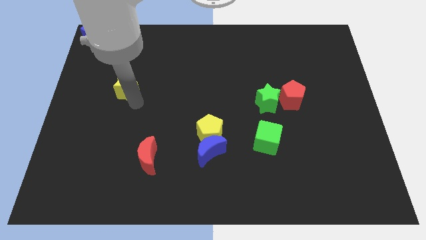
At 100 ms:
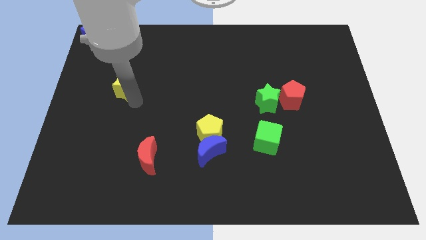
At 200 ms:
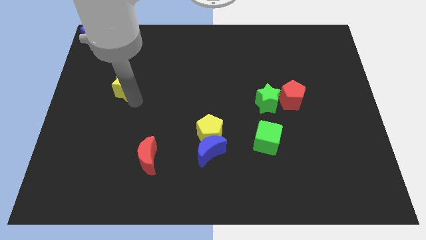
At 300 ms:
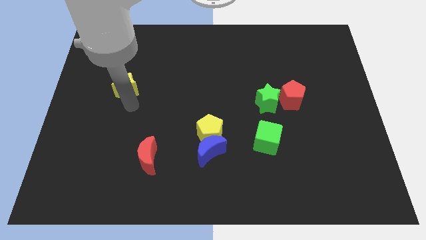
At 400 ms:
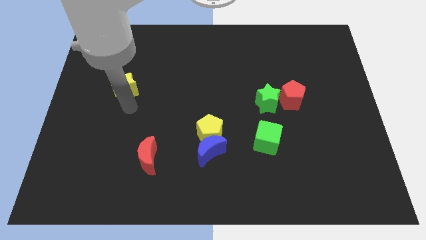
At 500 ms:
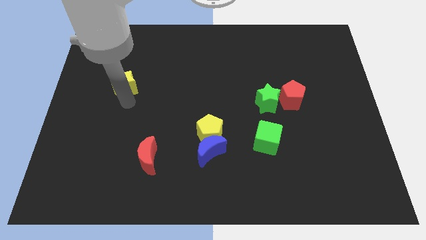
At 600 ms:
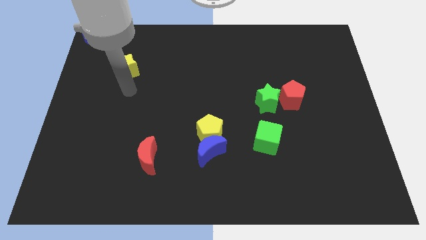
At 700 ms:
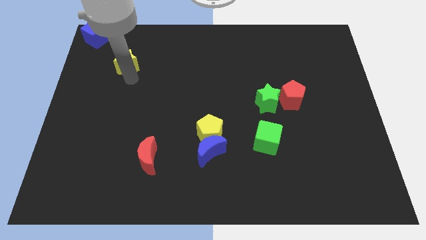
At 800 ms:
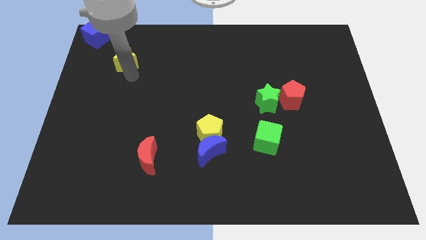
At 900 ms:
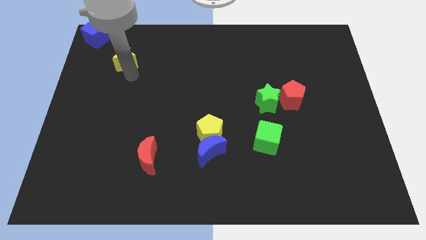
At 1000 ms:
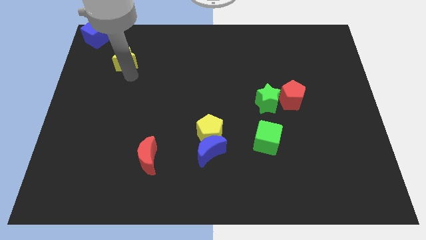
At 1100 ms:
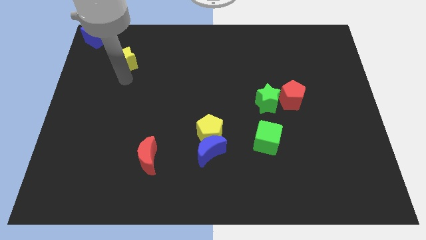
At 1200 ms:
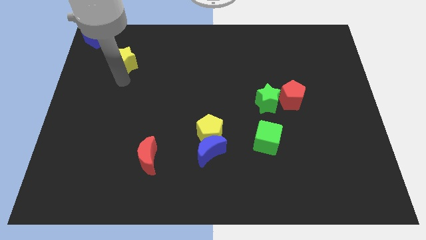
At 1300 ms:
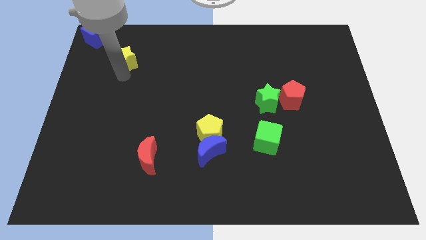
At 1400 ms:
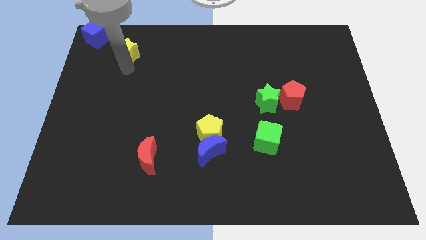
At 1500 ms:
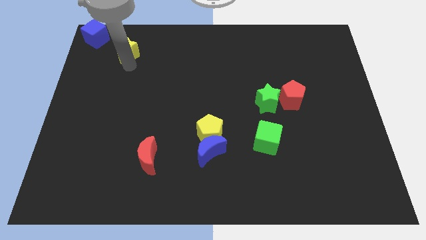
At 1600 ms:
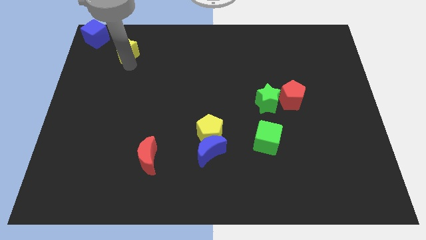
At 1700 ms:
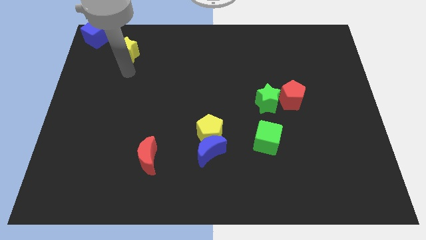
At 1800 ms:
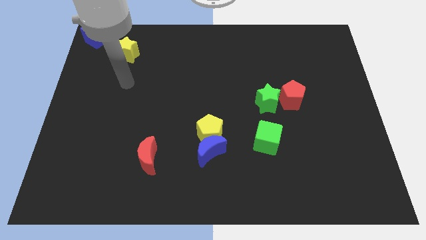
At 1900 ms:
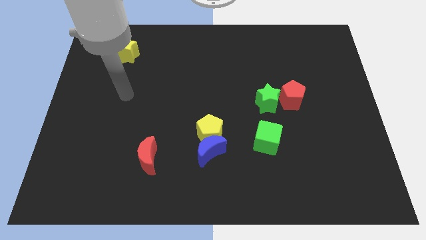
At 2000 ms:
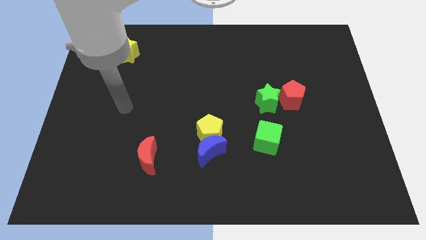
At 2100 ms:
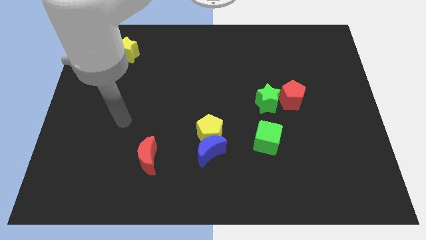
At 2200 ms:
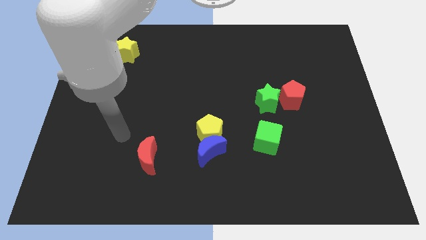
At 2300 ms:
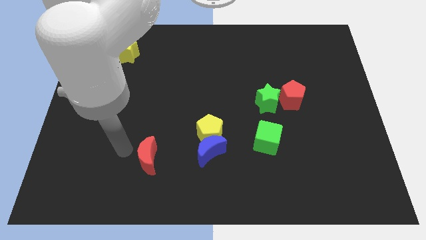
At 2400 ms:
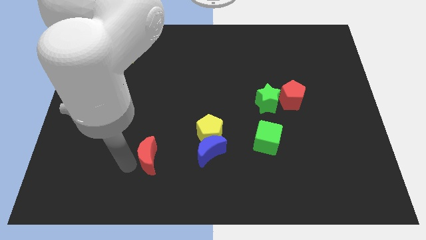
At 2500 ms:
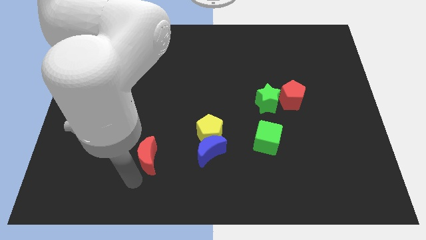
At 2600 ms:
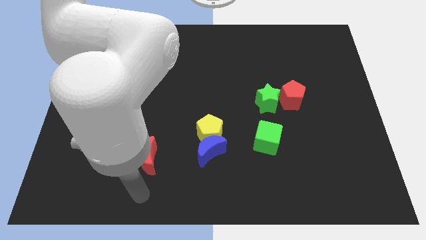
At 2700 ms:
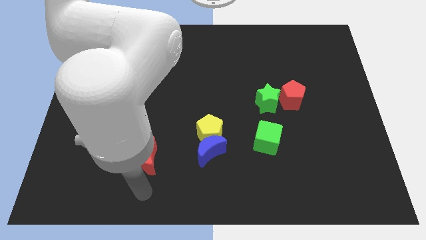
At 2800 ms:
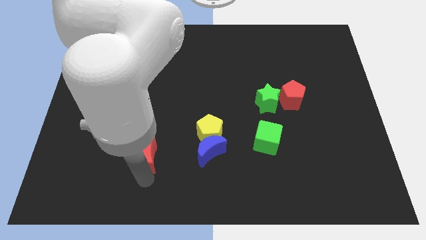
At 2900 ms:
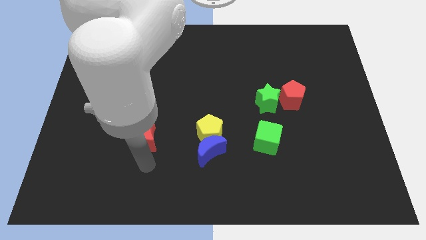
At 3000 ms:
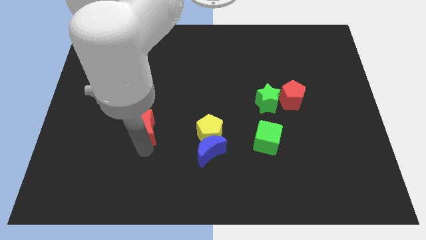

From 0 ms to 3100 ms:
move red moon towards the yellow star

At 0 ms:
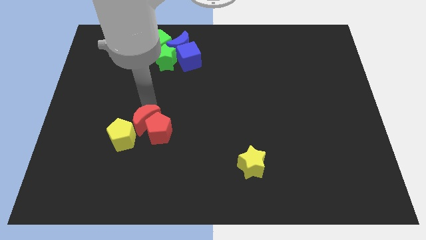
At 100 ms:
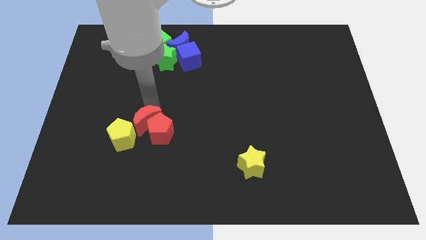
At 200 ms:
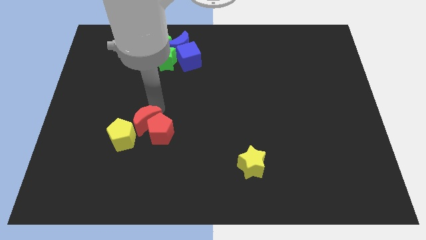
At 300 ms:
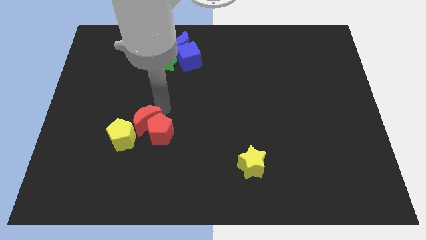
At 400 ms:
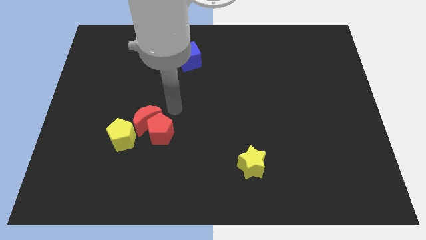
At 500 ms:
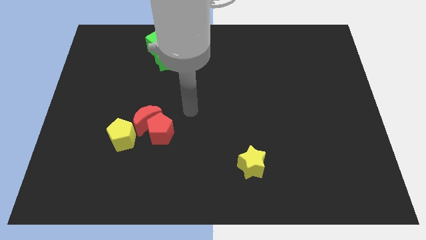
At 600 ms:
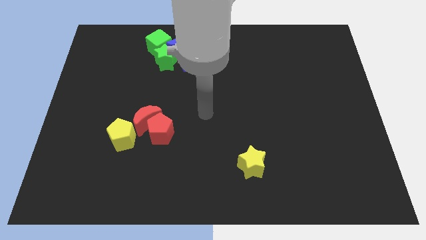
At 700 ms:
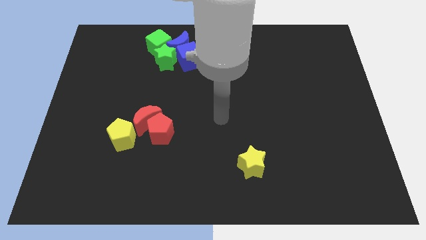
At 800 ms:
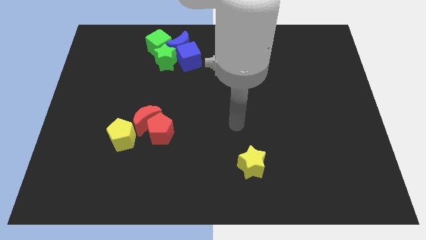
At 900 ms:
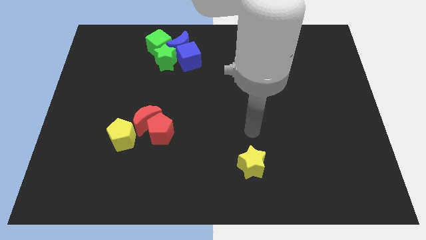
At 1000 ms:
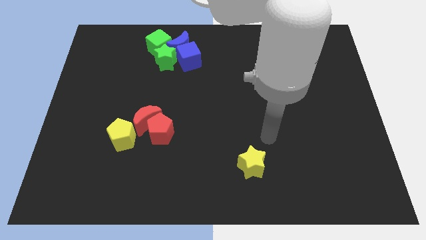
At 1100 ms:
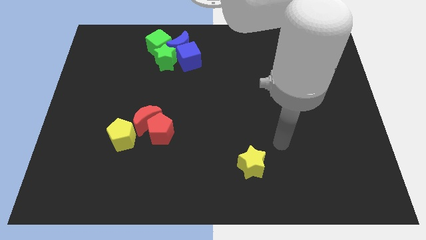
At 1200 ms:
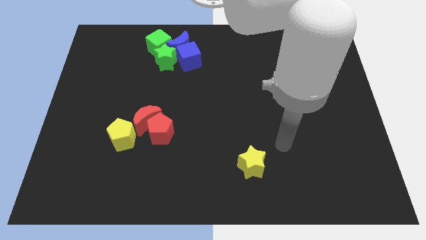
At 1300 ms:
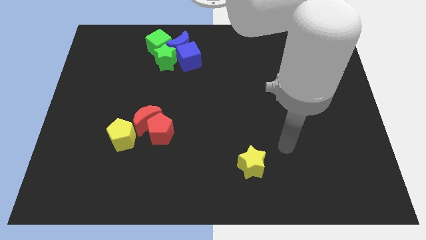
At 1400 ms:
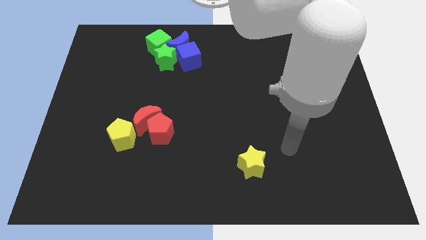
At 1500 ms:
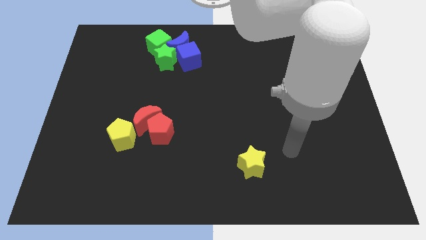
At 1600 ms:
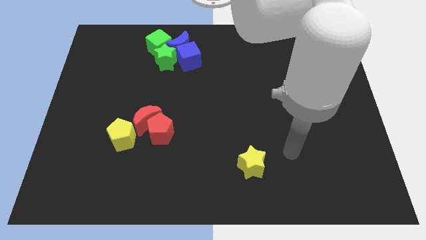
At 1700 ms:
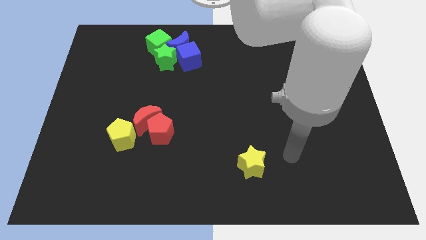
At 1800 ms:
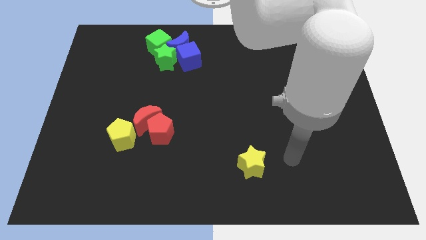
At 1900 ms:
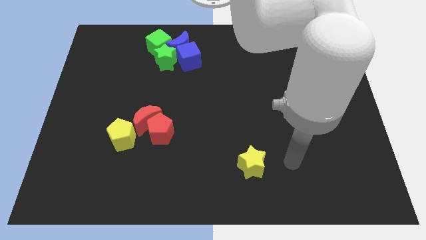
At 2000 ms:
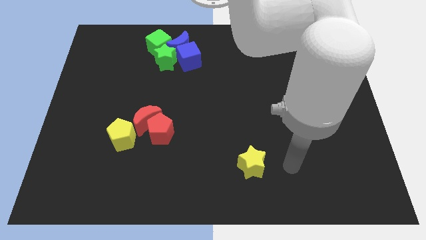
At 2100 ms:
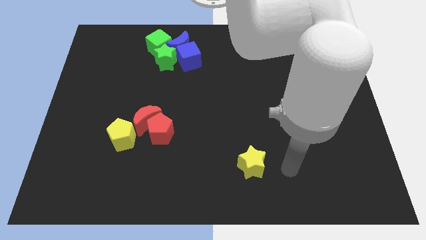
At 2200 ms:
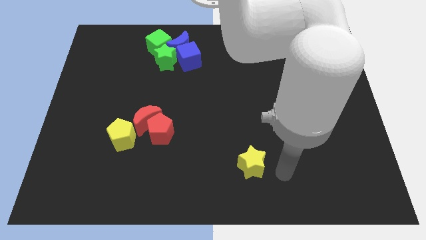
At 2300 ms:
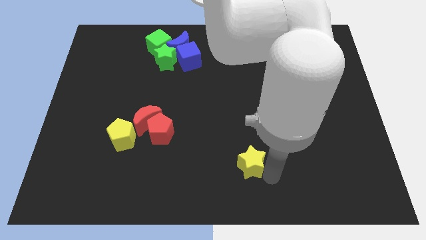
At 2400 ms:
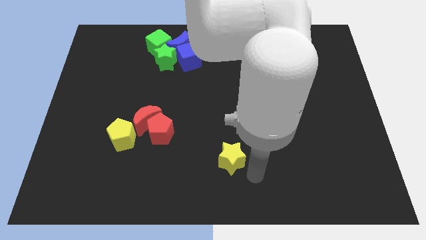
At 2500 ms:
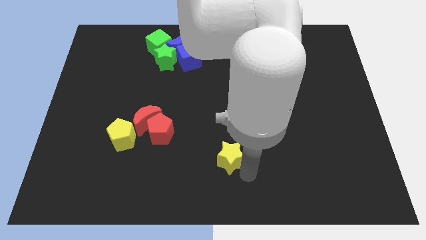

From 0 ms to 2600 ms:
move your arm to the bottom of yellow star

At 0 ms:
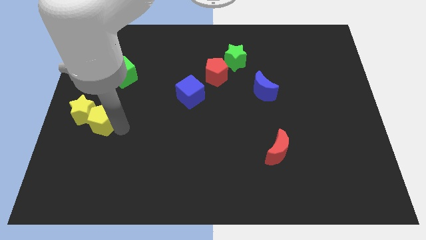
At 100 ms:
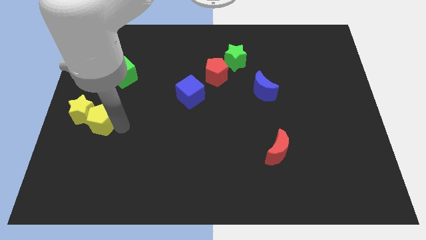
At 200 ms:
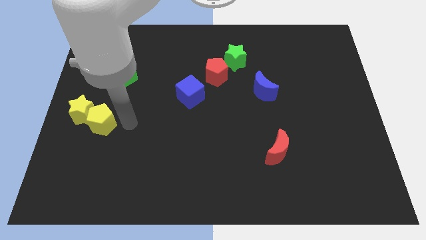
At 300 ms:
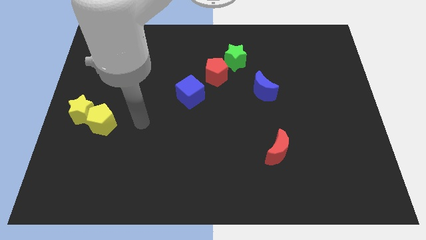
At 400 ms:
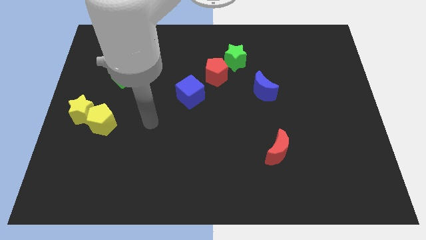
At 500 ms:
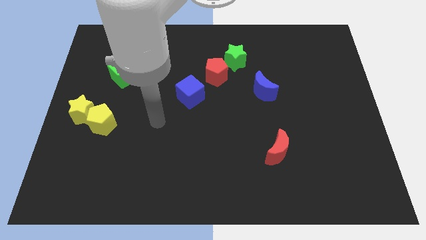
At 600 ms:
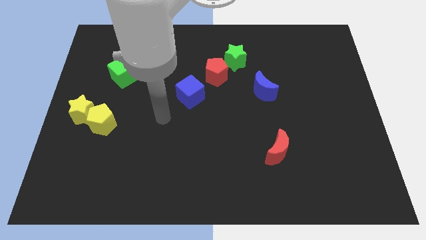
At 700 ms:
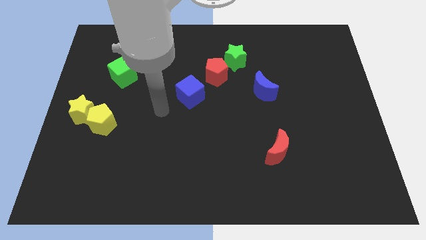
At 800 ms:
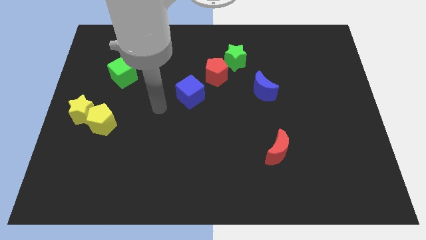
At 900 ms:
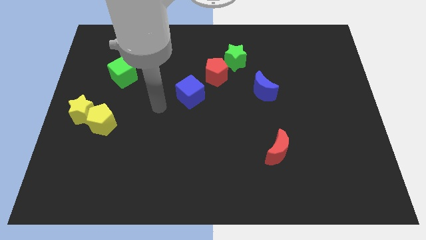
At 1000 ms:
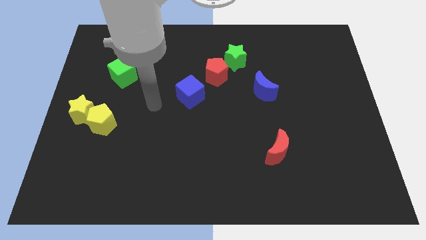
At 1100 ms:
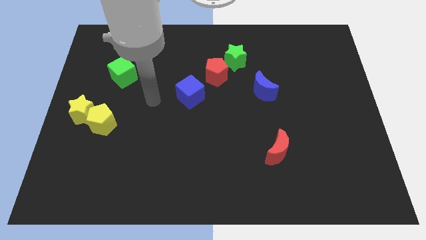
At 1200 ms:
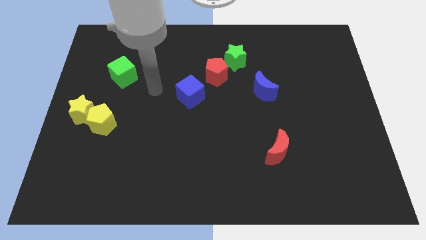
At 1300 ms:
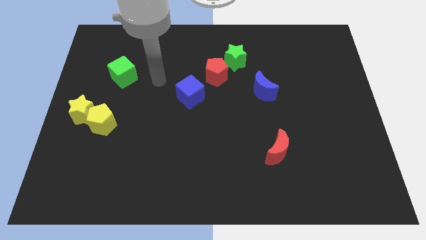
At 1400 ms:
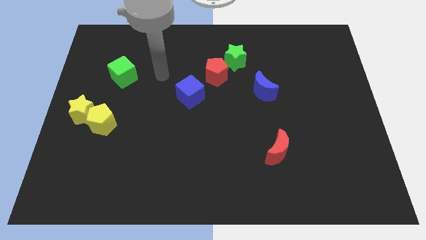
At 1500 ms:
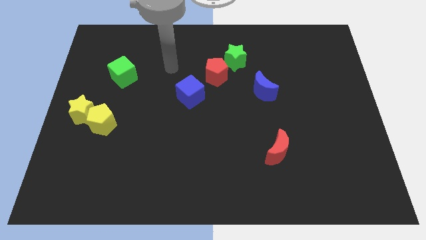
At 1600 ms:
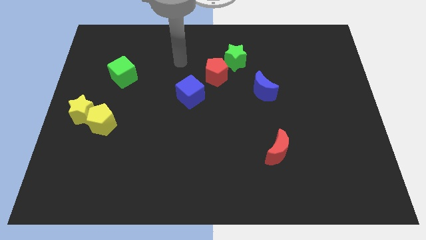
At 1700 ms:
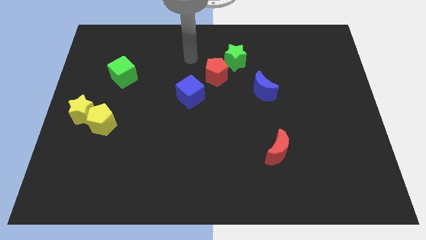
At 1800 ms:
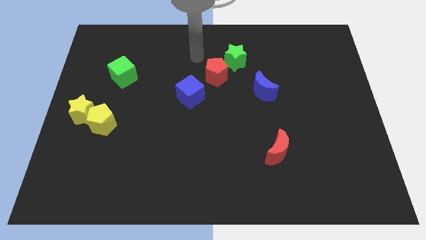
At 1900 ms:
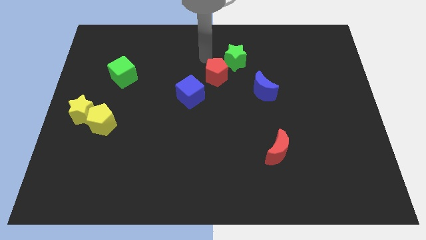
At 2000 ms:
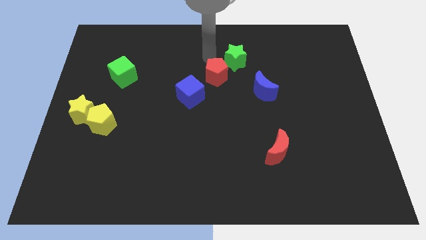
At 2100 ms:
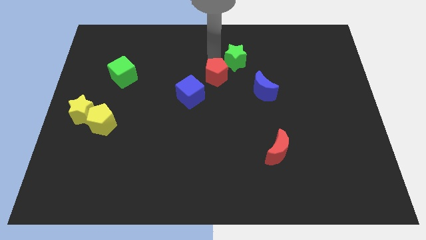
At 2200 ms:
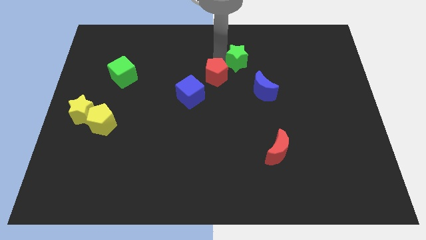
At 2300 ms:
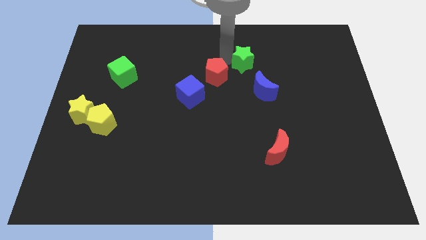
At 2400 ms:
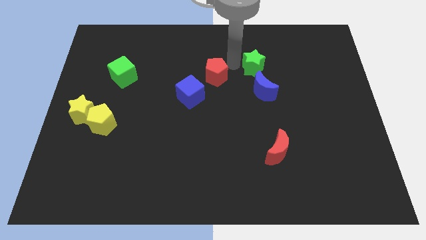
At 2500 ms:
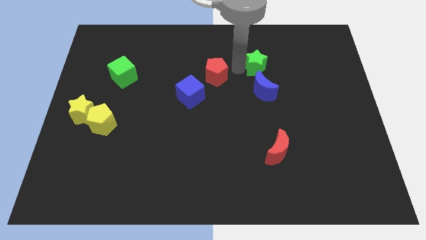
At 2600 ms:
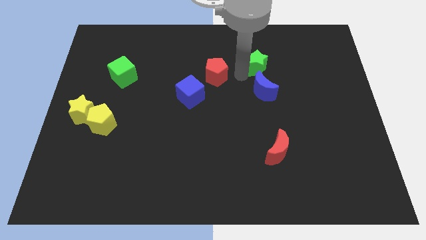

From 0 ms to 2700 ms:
push the green star towards the blue moon

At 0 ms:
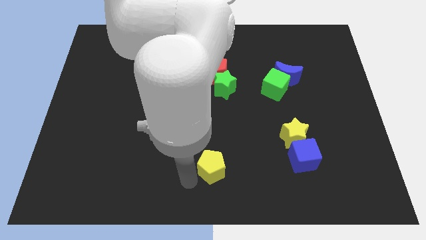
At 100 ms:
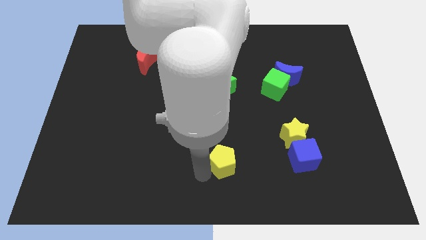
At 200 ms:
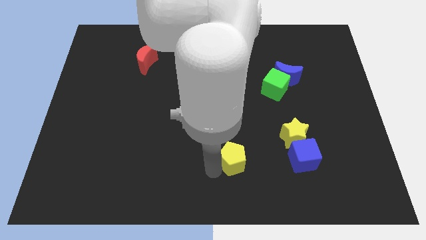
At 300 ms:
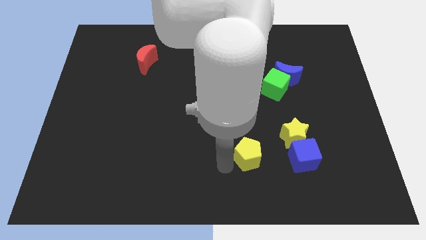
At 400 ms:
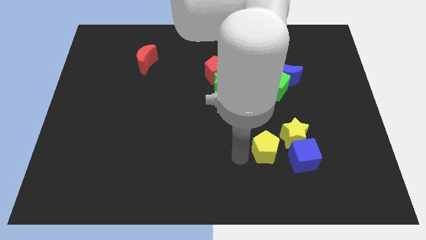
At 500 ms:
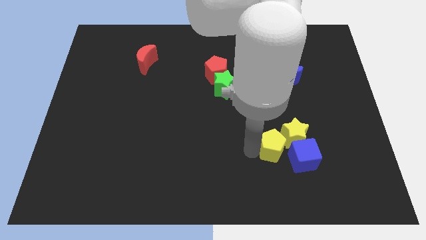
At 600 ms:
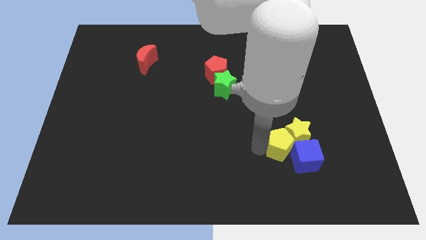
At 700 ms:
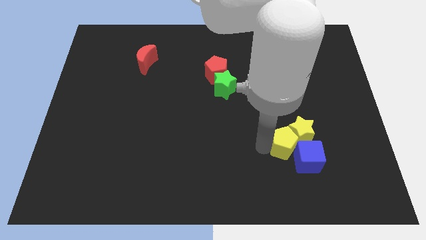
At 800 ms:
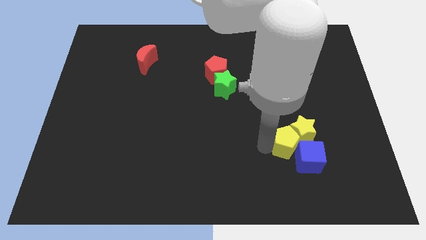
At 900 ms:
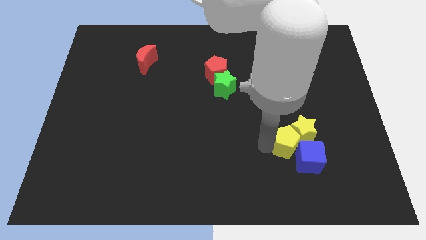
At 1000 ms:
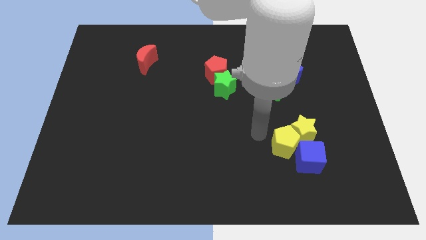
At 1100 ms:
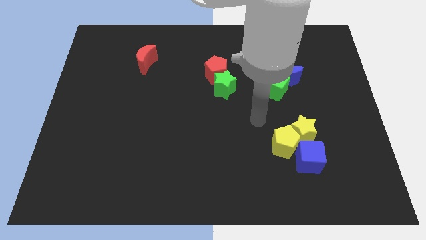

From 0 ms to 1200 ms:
place the yellow pentagon close to the yellow star
